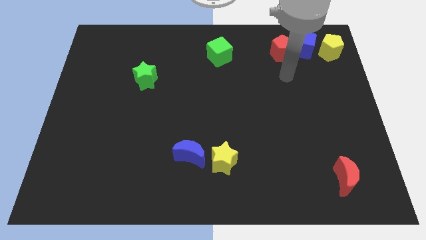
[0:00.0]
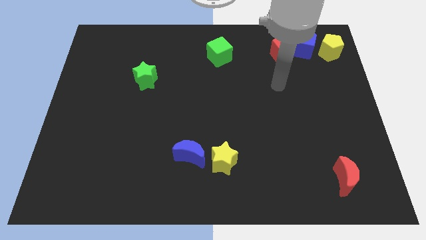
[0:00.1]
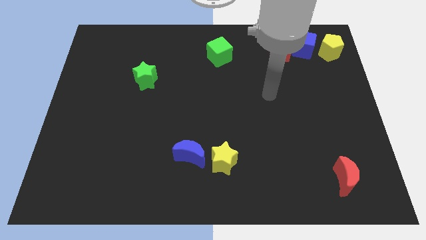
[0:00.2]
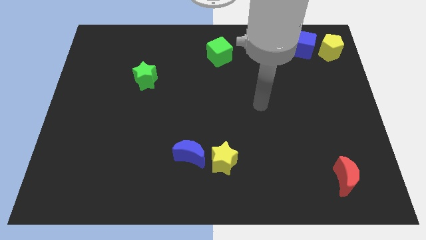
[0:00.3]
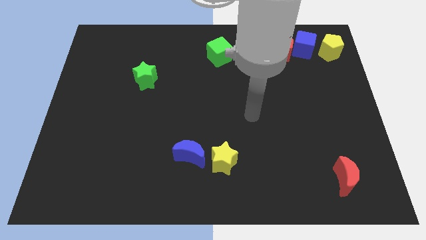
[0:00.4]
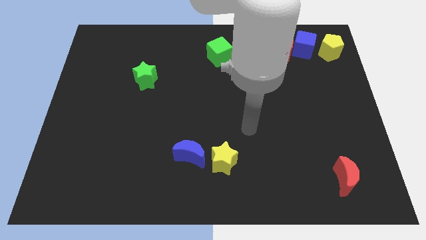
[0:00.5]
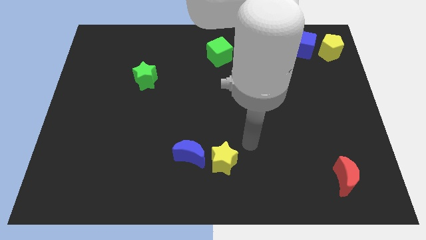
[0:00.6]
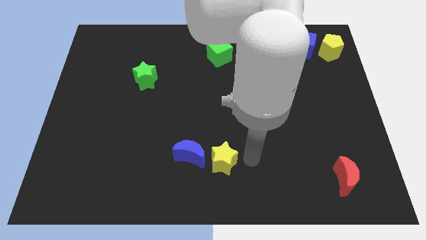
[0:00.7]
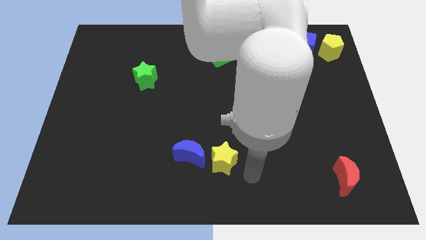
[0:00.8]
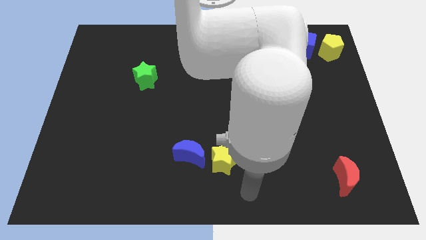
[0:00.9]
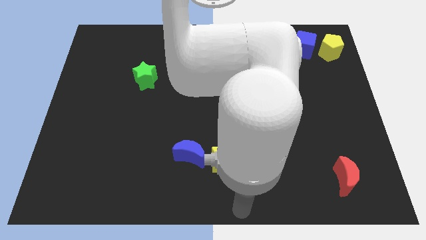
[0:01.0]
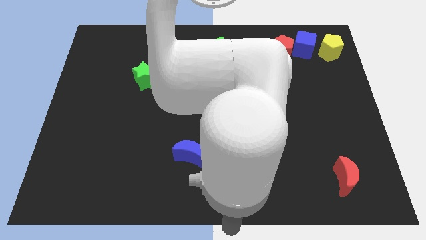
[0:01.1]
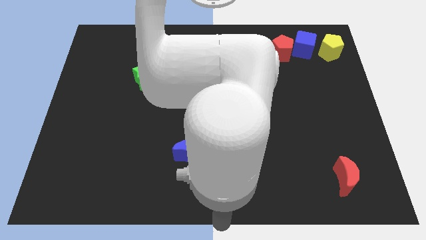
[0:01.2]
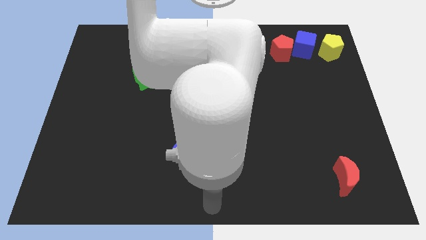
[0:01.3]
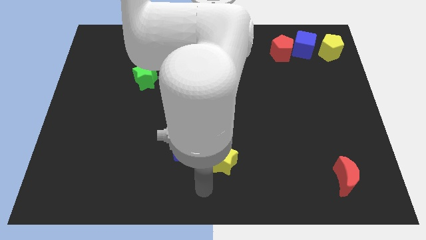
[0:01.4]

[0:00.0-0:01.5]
move your arm to the bottom center

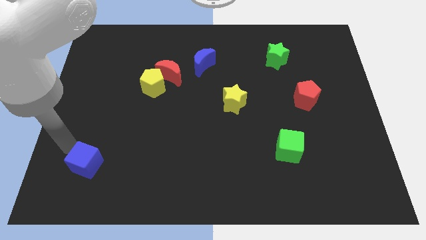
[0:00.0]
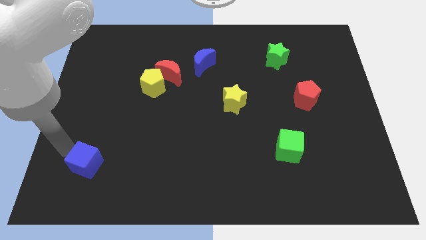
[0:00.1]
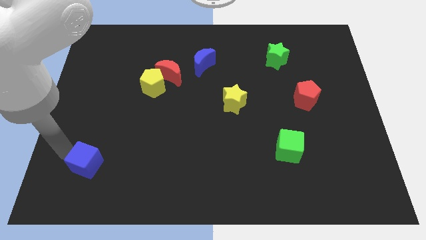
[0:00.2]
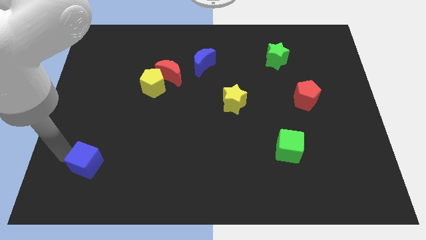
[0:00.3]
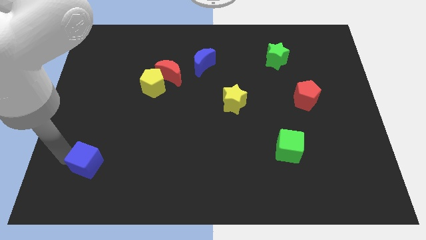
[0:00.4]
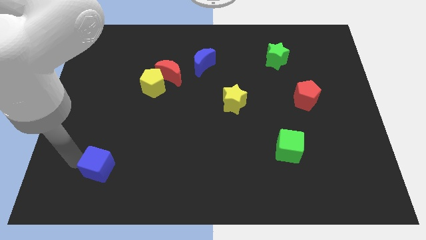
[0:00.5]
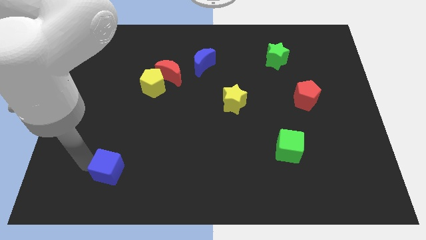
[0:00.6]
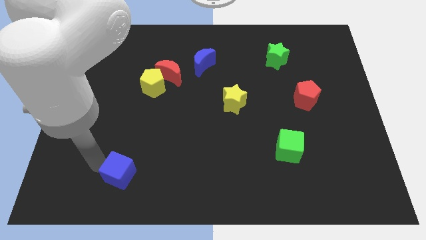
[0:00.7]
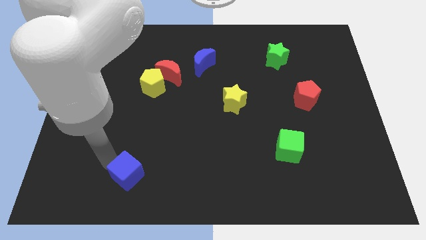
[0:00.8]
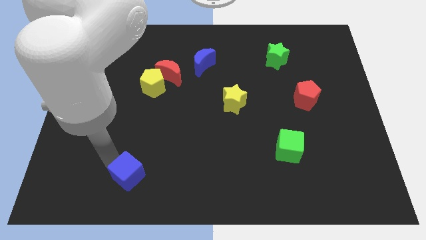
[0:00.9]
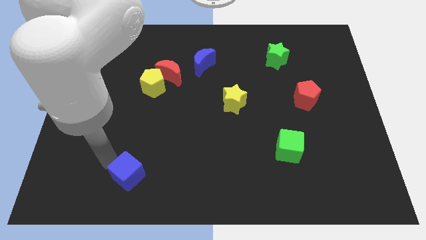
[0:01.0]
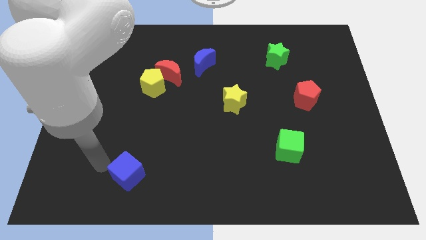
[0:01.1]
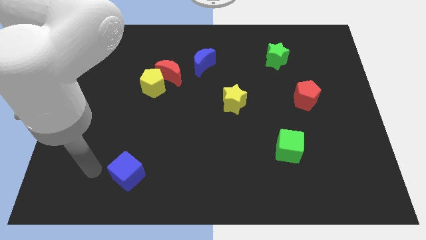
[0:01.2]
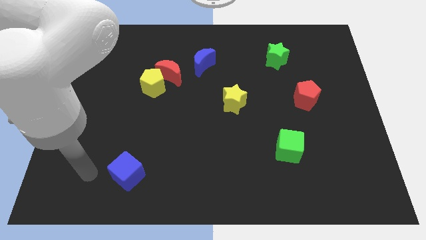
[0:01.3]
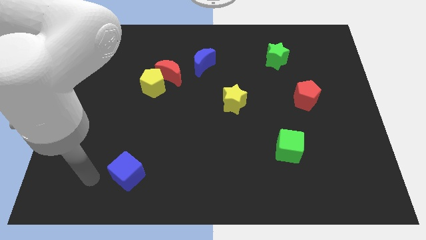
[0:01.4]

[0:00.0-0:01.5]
push the blue cube to the right of the board

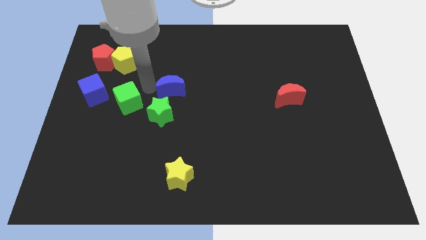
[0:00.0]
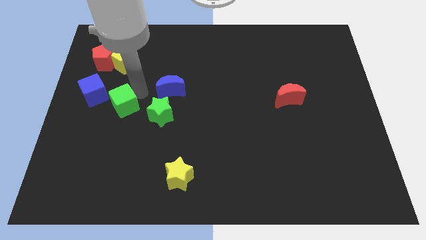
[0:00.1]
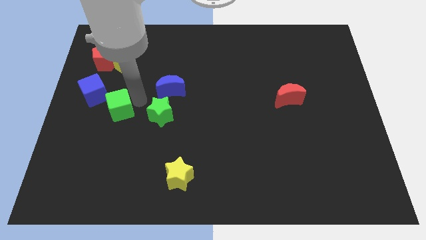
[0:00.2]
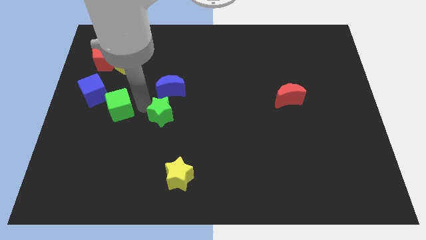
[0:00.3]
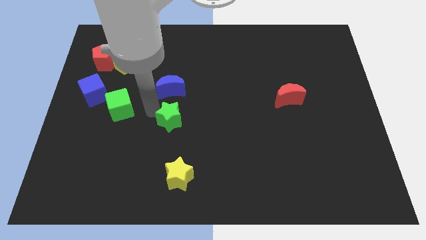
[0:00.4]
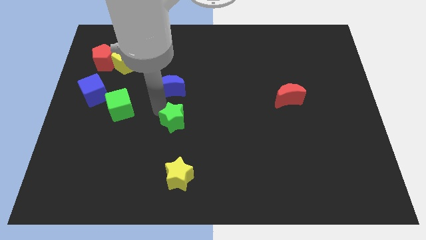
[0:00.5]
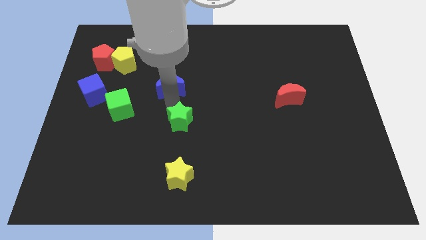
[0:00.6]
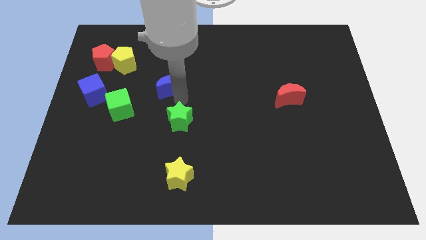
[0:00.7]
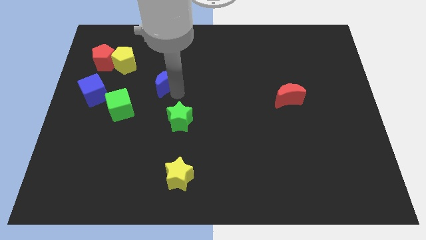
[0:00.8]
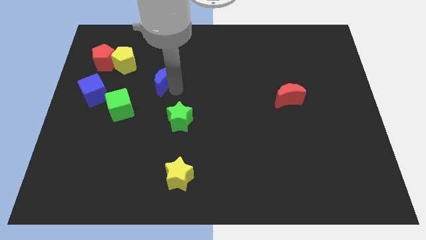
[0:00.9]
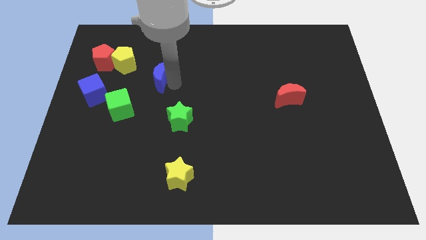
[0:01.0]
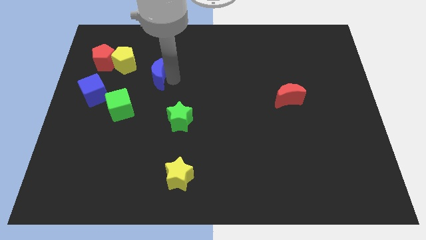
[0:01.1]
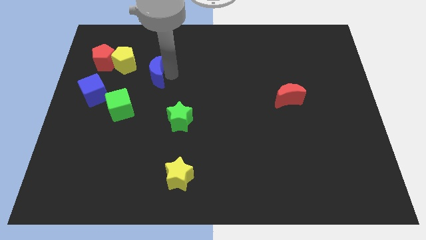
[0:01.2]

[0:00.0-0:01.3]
slightly push green blocks down

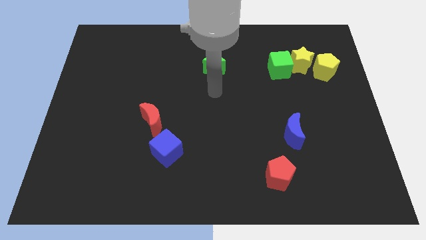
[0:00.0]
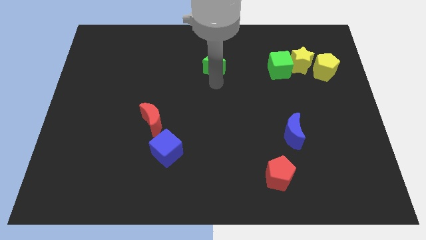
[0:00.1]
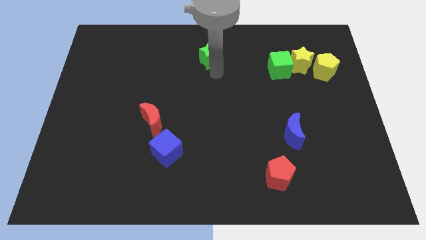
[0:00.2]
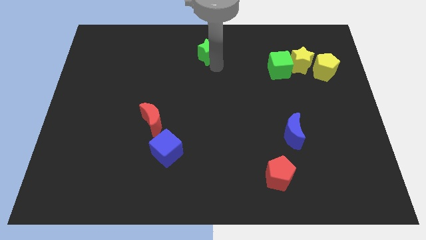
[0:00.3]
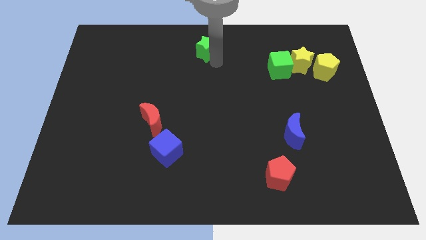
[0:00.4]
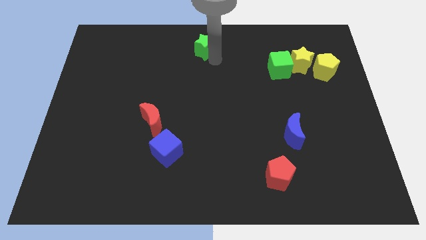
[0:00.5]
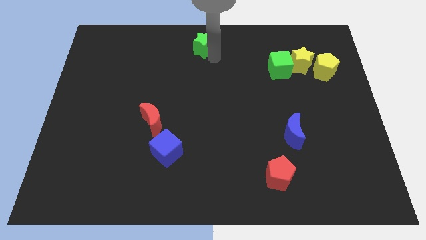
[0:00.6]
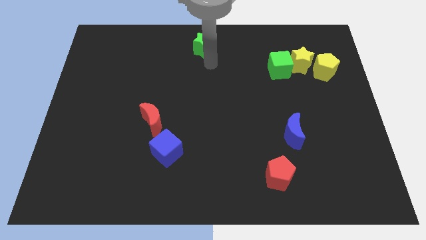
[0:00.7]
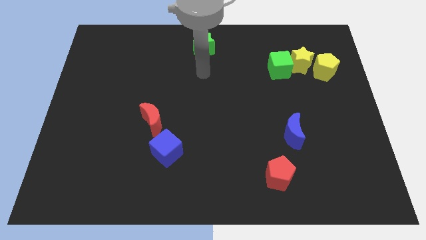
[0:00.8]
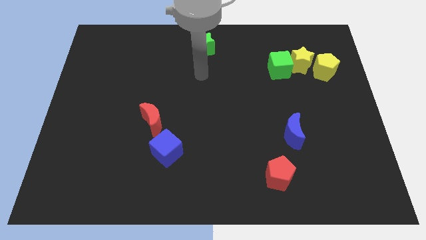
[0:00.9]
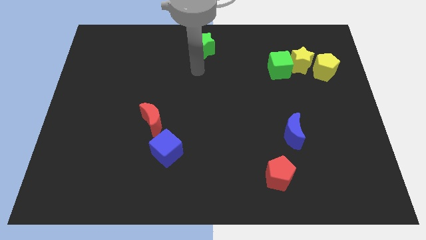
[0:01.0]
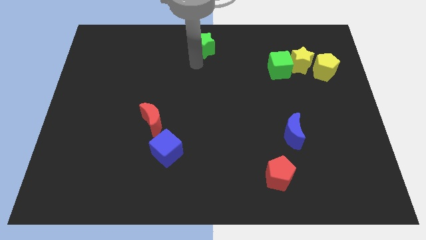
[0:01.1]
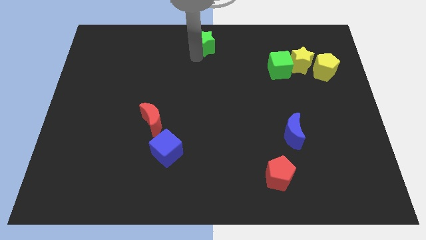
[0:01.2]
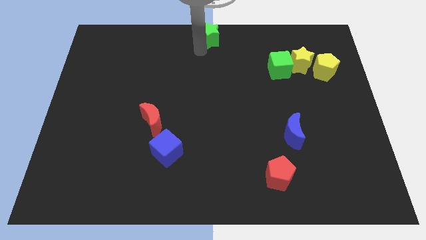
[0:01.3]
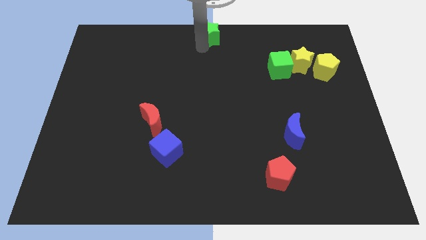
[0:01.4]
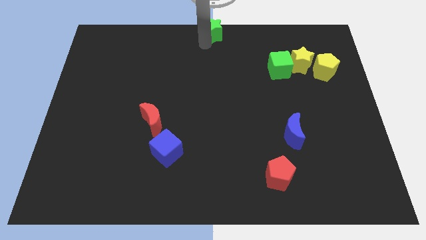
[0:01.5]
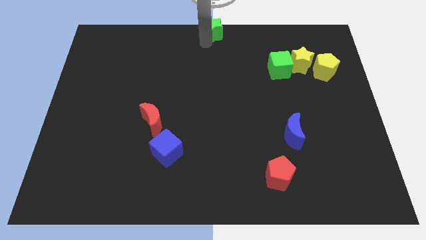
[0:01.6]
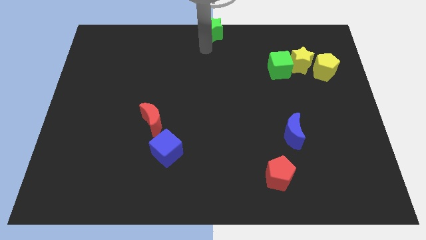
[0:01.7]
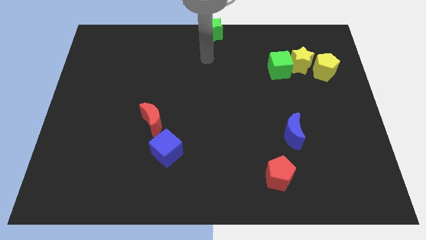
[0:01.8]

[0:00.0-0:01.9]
place the green star at the top center of the board

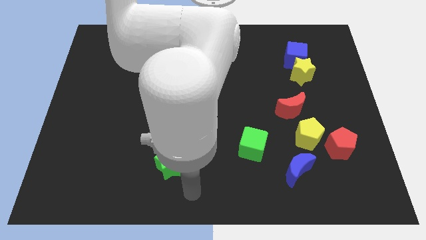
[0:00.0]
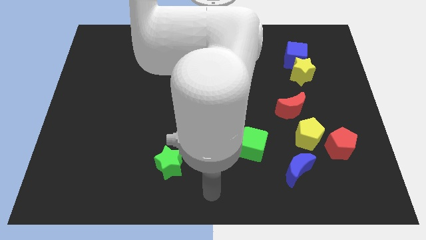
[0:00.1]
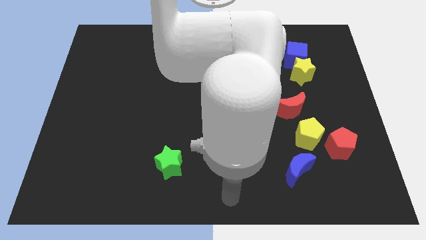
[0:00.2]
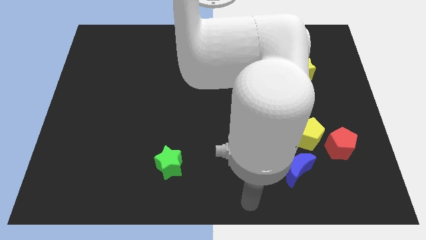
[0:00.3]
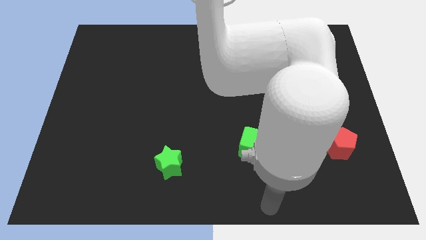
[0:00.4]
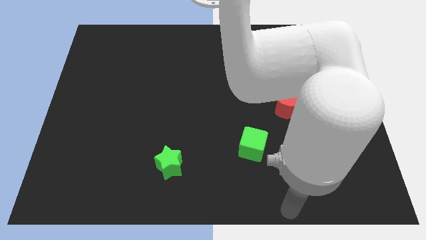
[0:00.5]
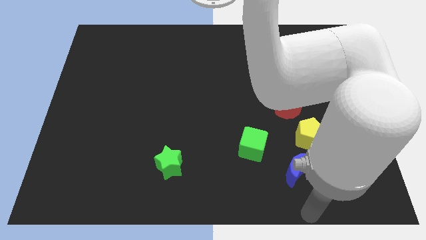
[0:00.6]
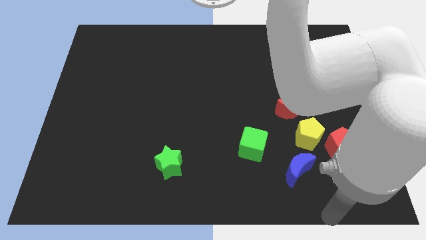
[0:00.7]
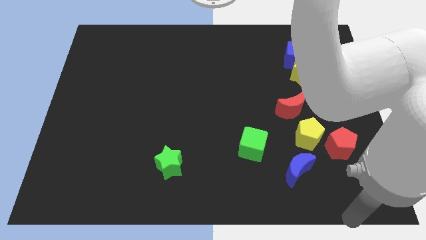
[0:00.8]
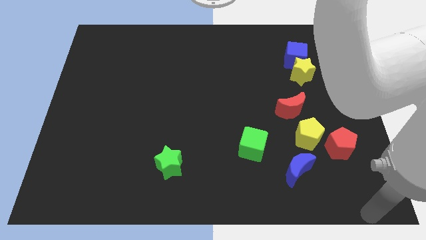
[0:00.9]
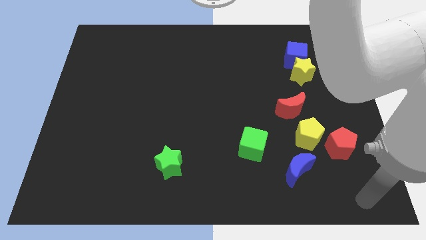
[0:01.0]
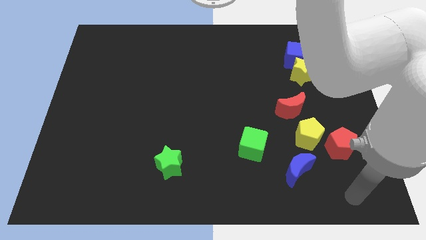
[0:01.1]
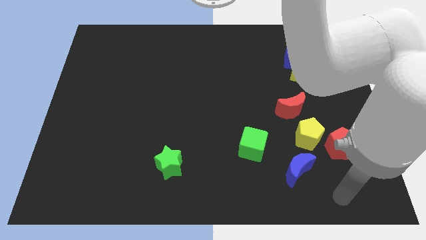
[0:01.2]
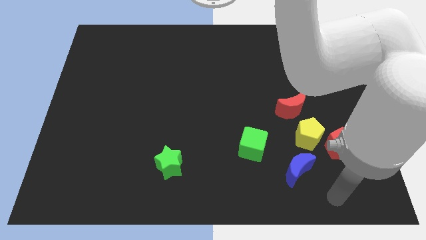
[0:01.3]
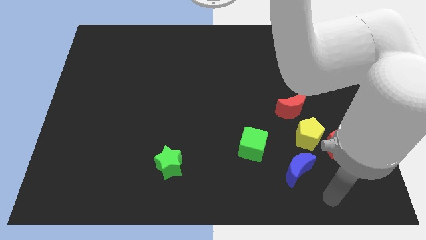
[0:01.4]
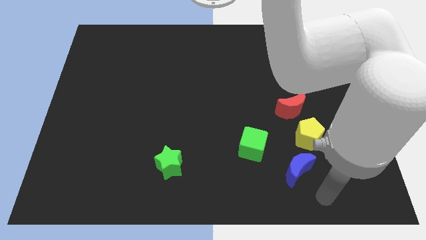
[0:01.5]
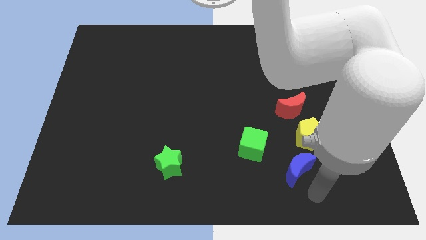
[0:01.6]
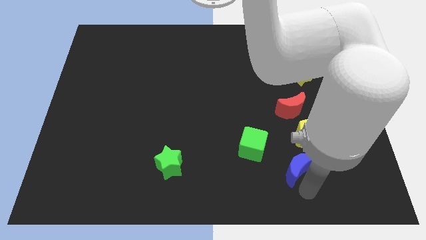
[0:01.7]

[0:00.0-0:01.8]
point your arm at the bottom right side of the green cube

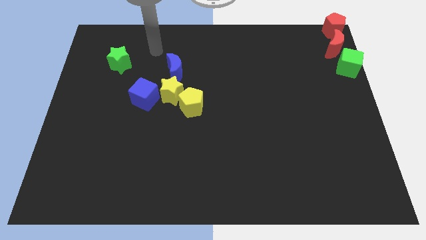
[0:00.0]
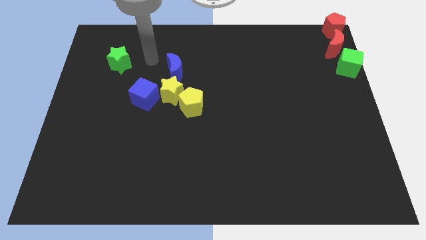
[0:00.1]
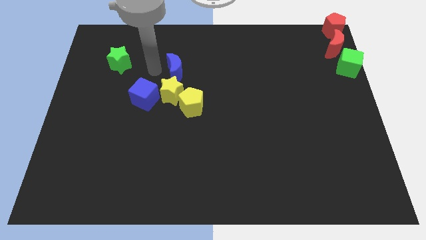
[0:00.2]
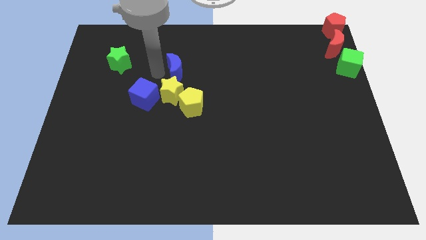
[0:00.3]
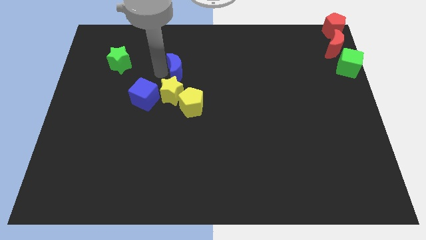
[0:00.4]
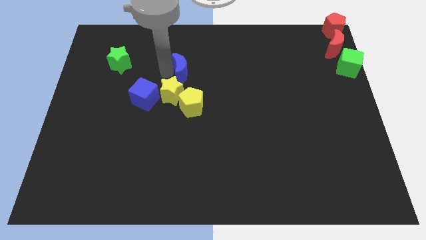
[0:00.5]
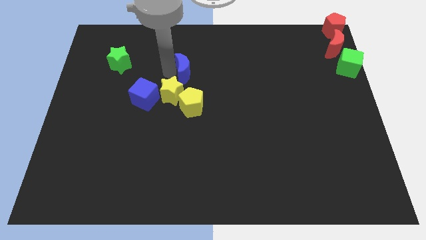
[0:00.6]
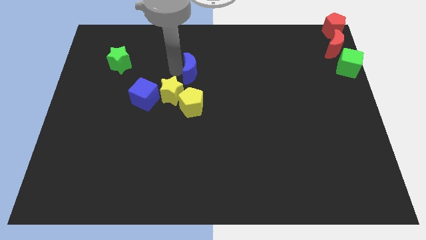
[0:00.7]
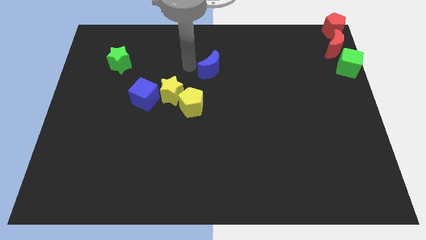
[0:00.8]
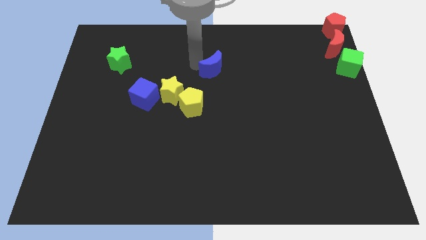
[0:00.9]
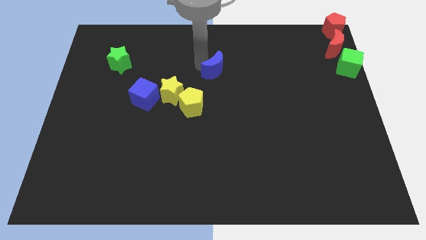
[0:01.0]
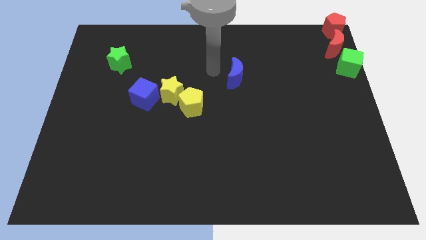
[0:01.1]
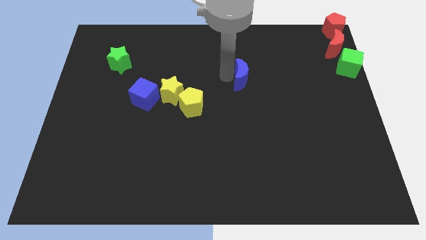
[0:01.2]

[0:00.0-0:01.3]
move the blue moon diagonal to the yellow pentagon
